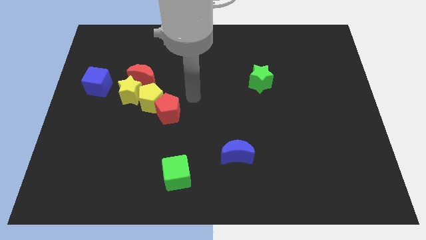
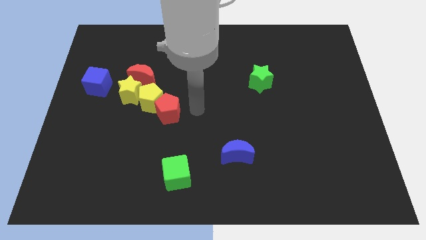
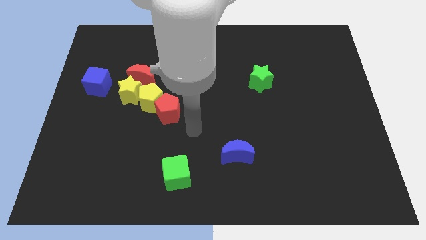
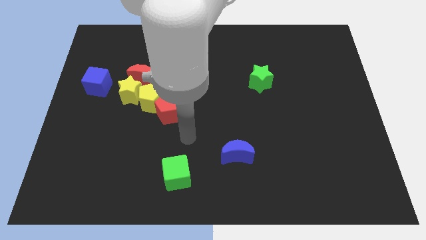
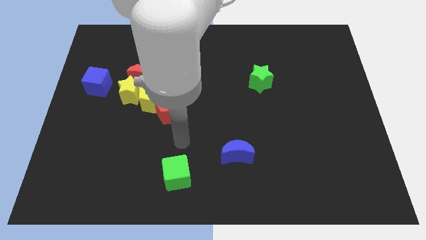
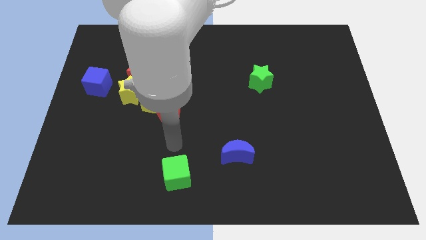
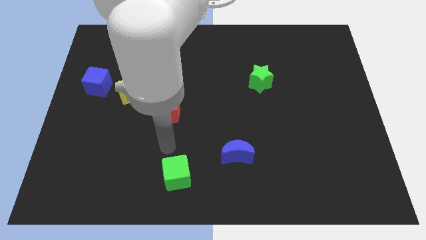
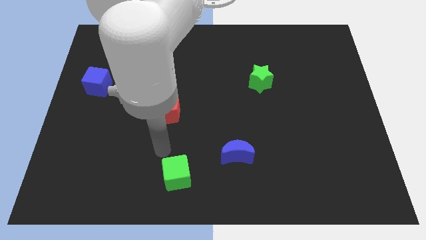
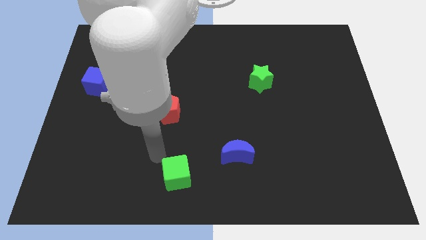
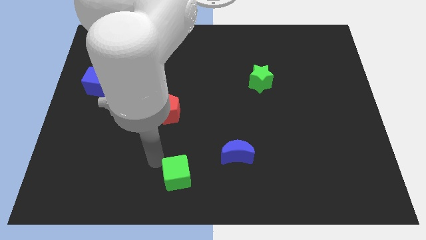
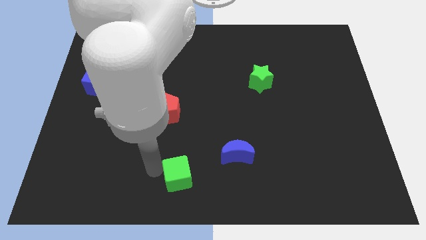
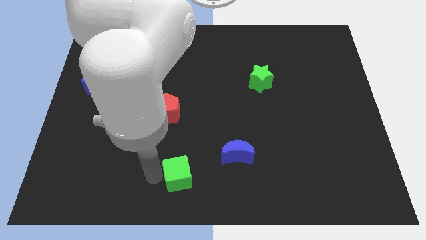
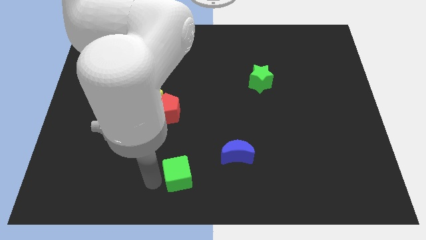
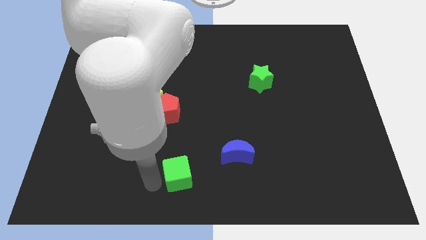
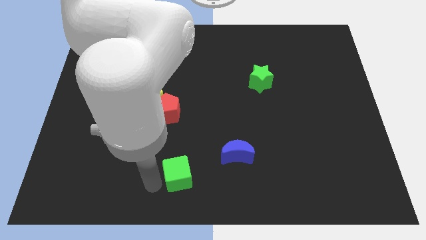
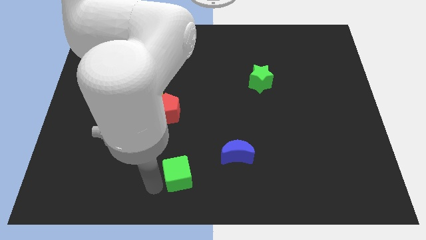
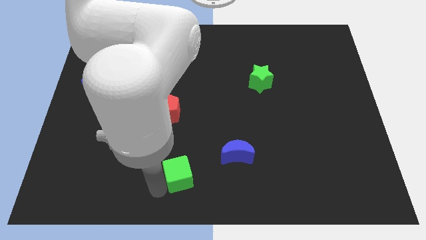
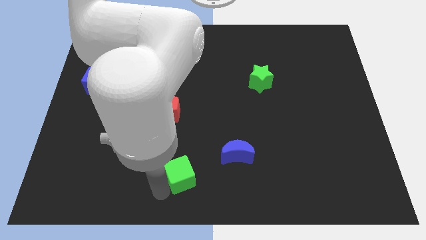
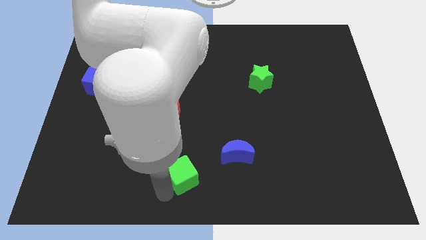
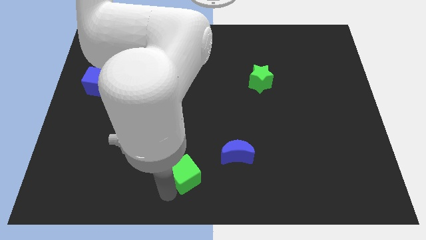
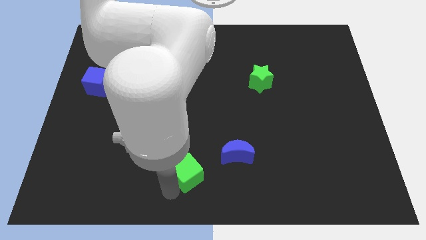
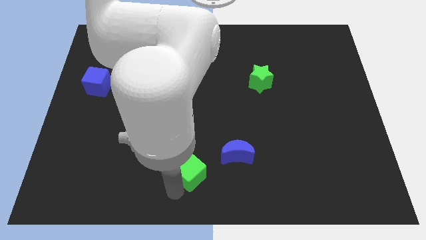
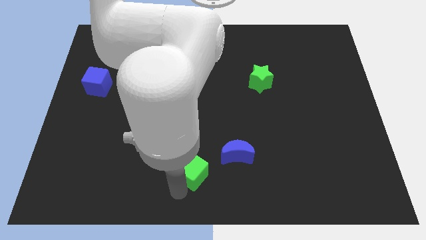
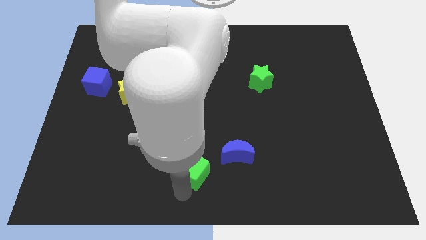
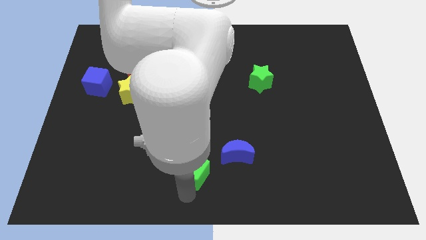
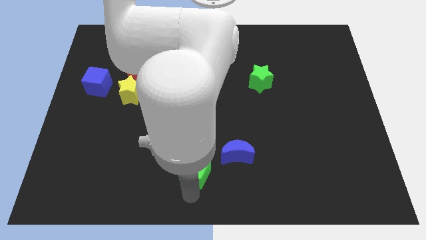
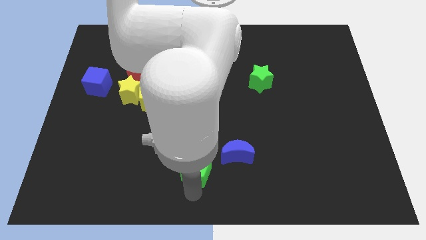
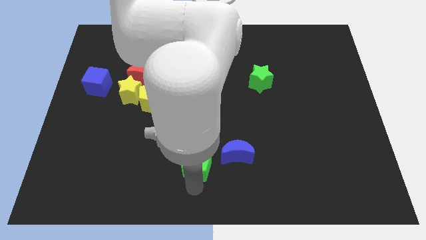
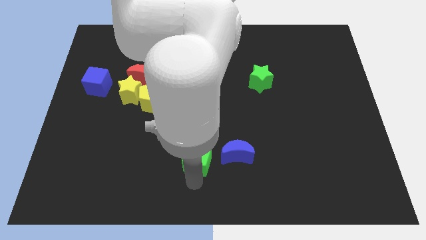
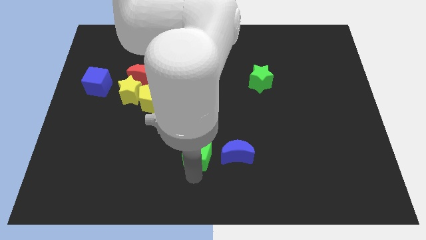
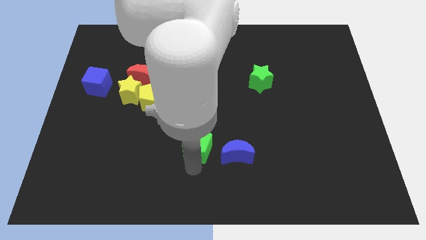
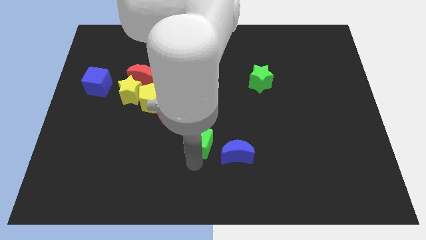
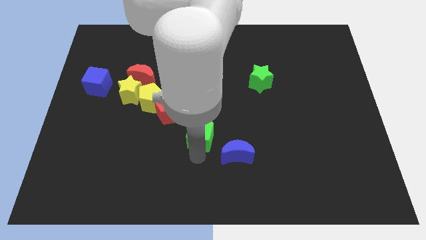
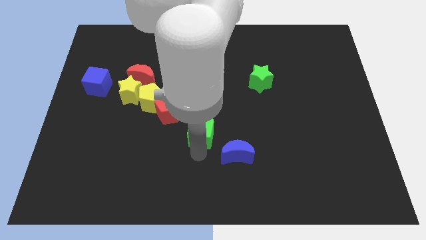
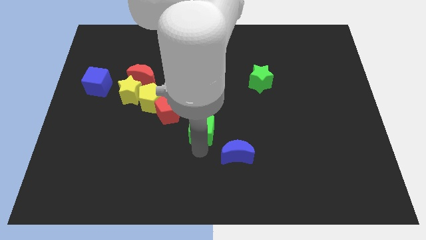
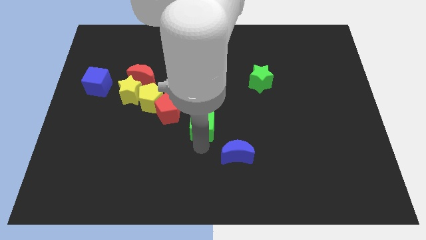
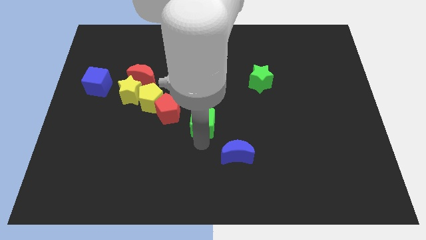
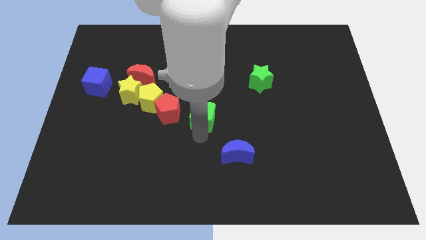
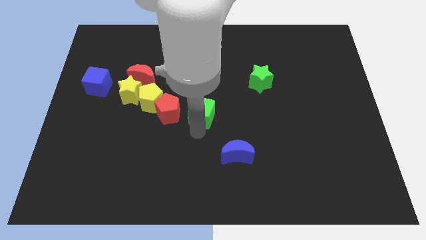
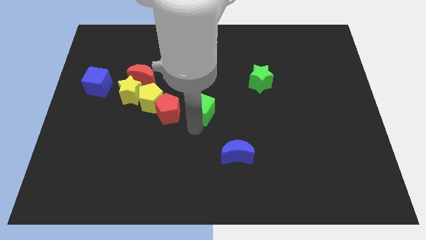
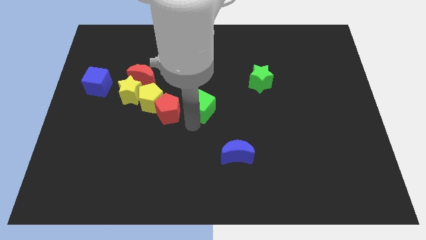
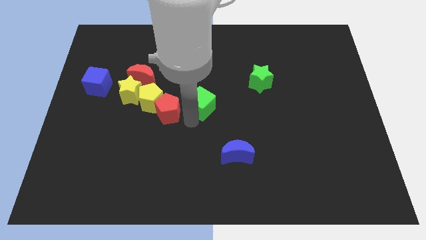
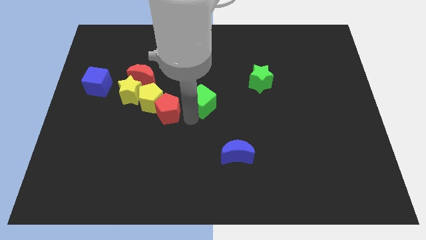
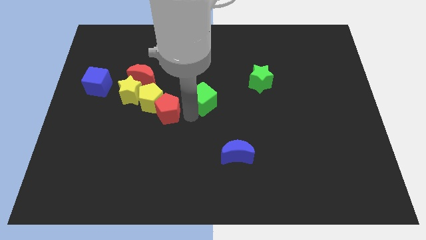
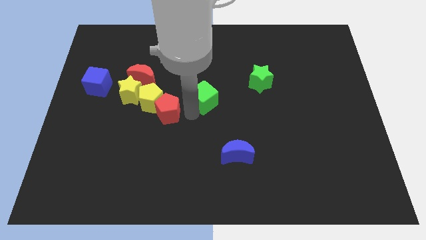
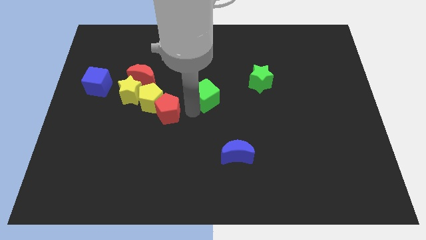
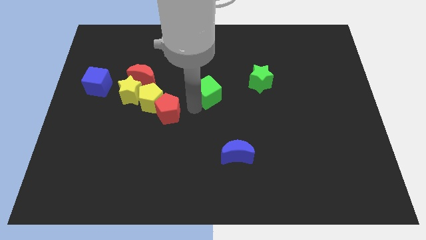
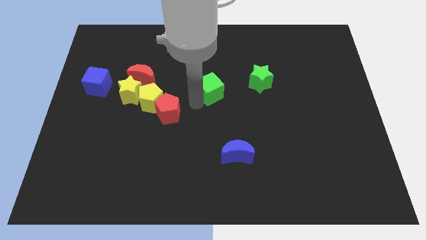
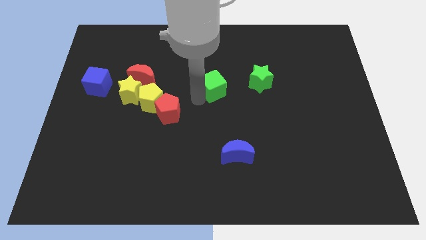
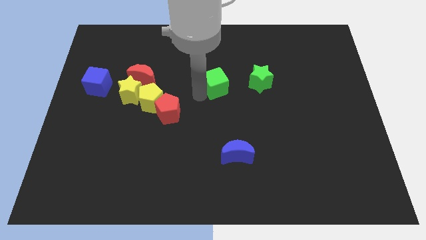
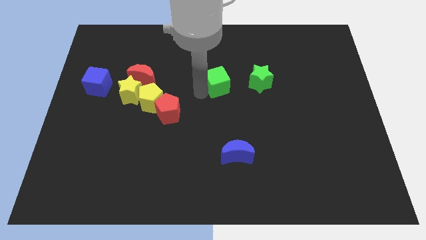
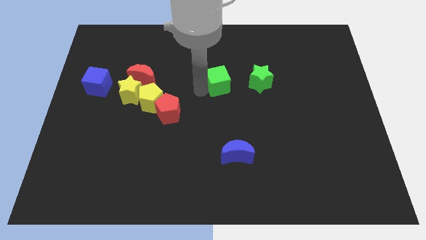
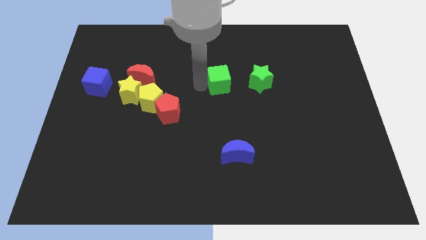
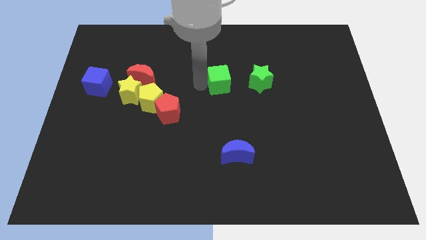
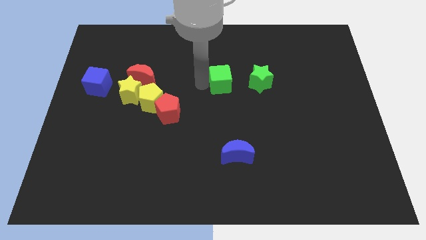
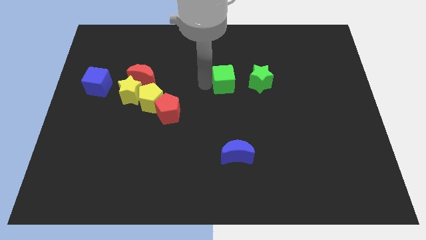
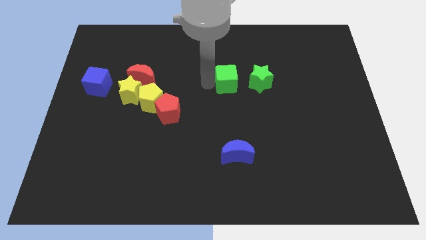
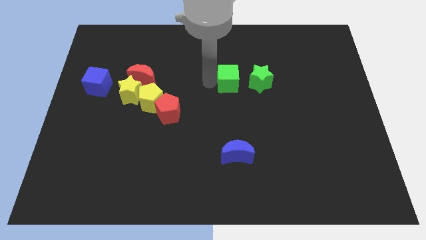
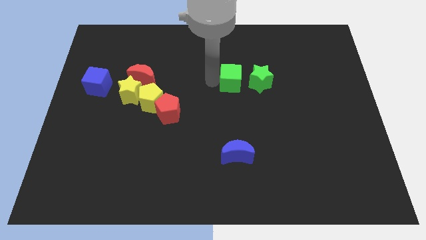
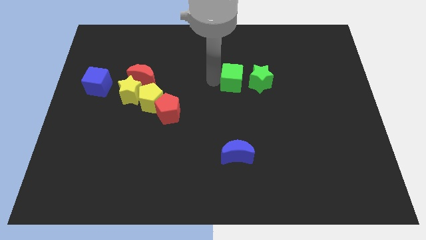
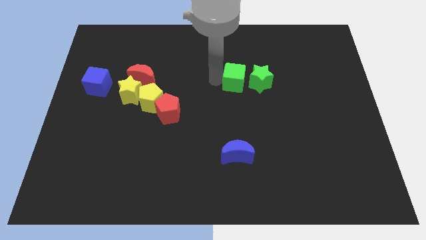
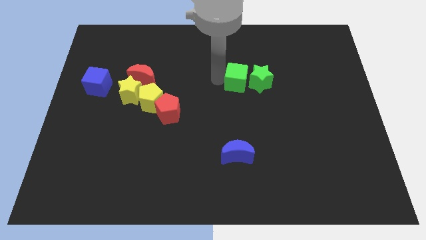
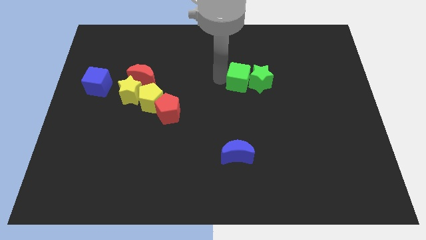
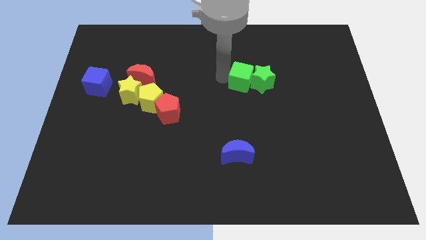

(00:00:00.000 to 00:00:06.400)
put the green cube to the green star

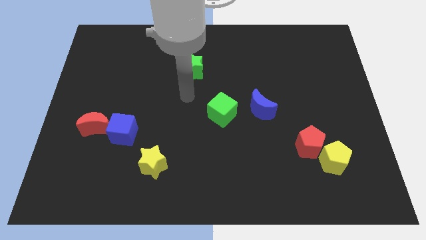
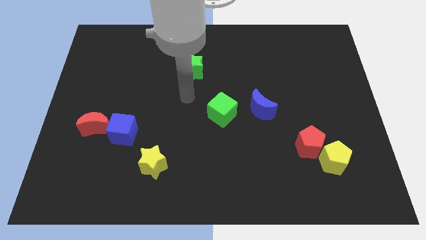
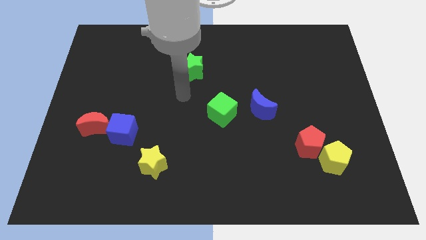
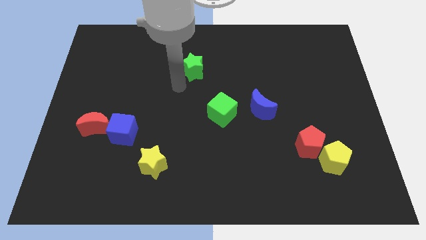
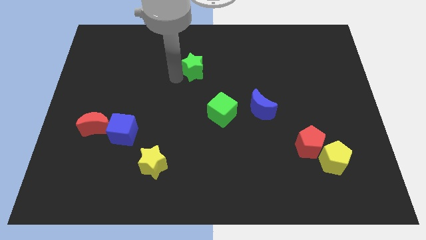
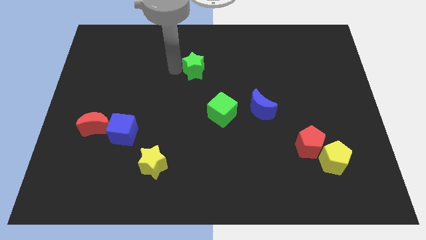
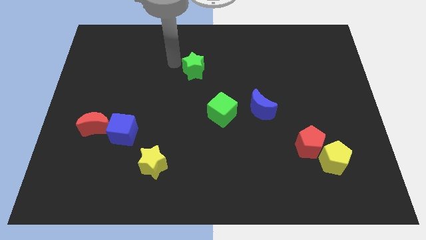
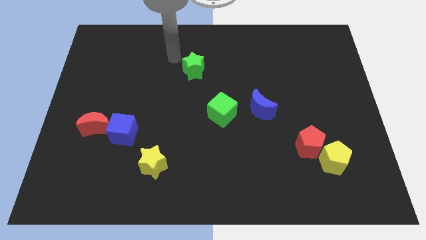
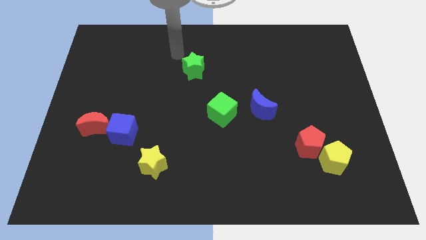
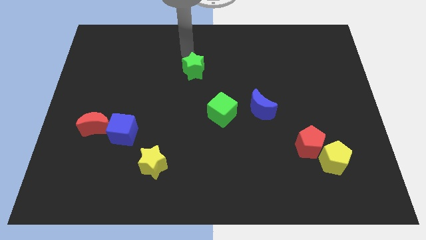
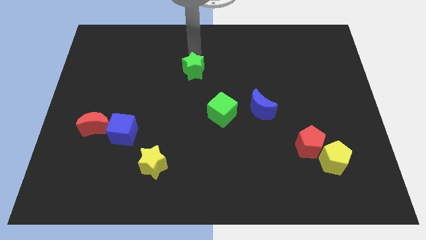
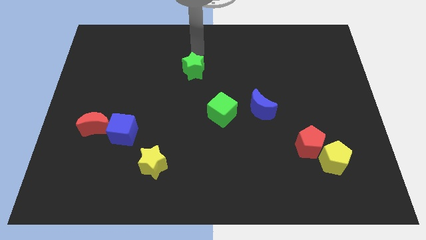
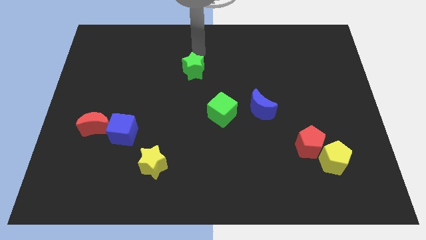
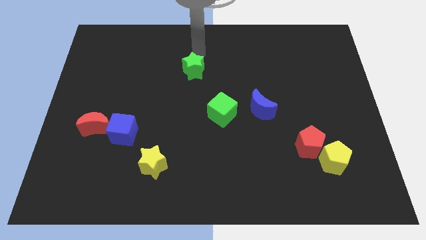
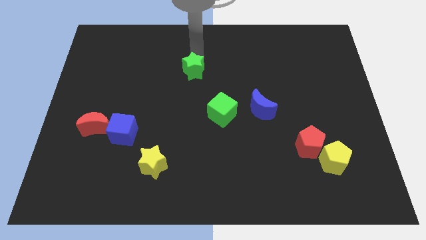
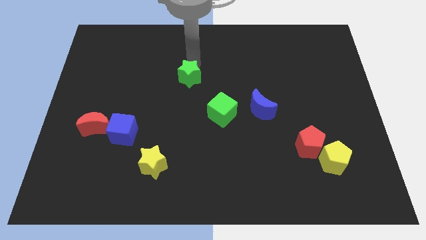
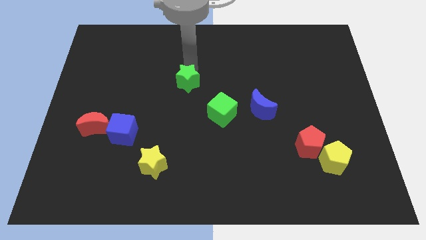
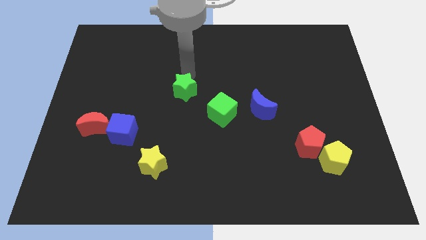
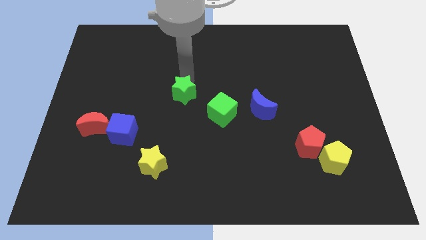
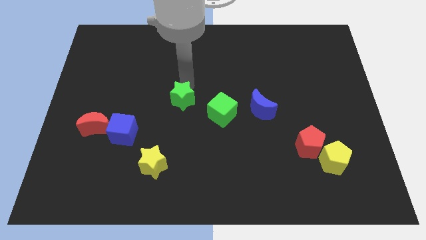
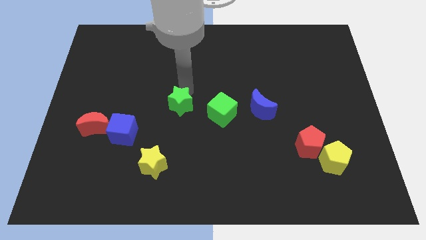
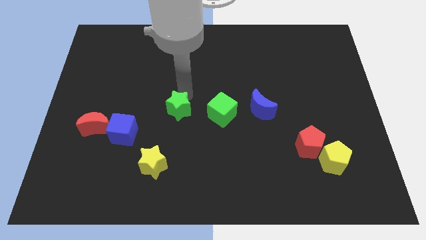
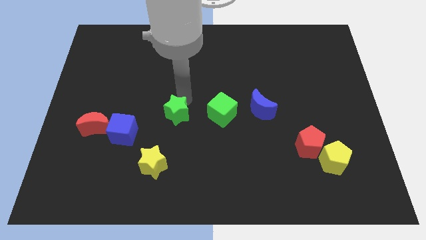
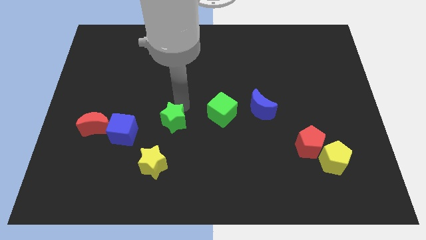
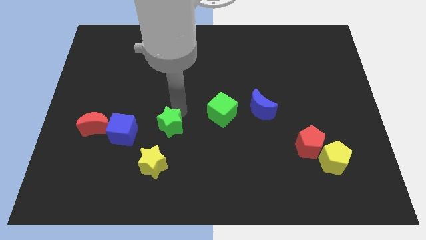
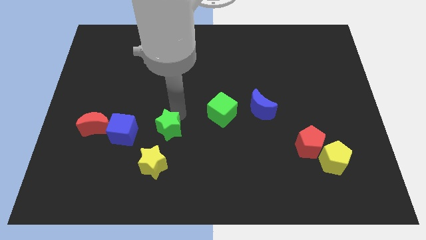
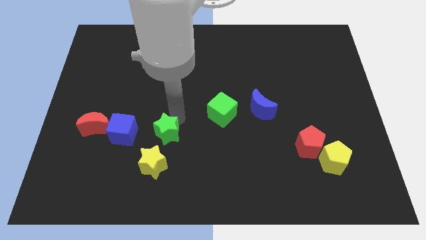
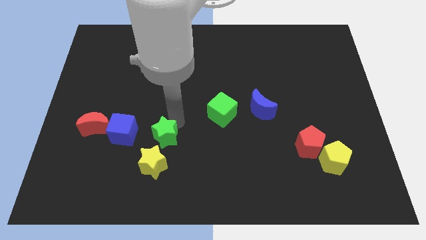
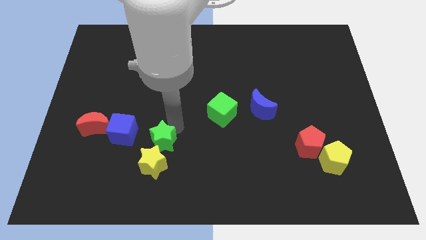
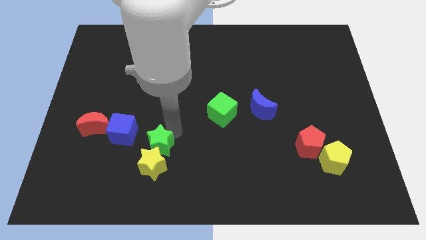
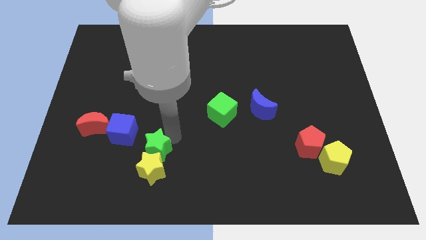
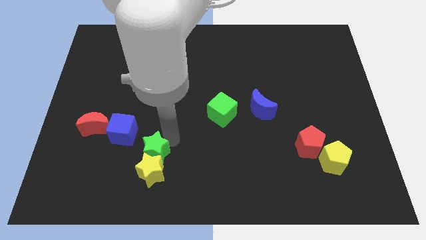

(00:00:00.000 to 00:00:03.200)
slide the green star close to the yellow star
